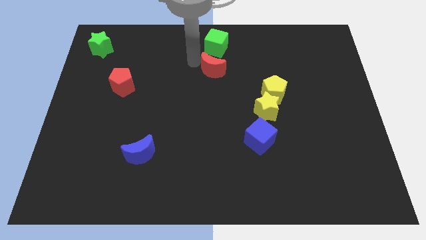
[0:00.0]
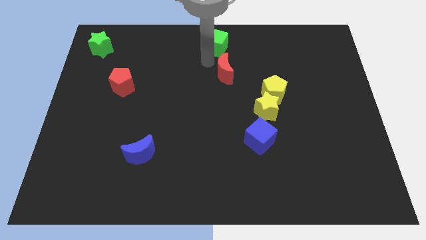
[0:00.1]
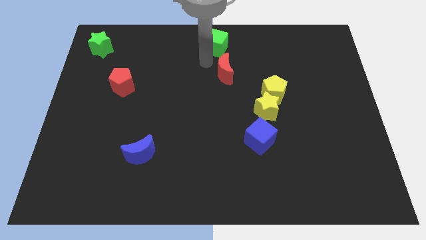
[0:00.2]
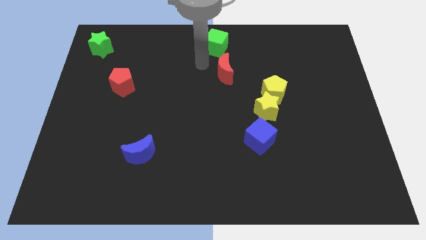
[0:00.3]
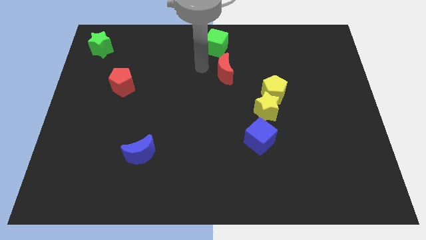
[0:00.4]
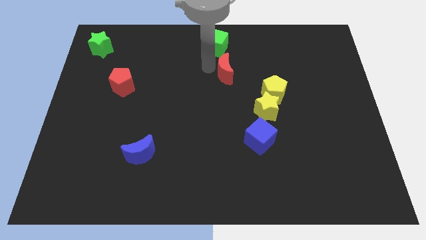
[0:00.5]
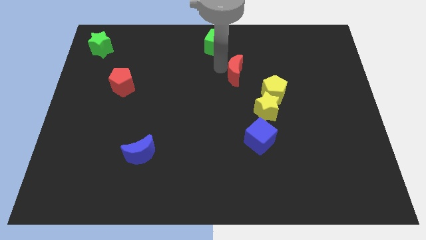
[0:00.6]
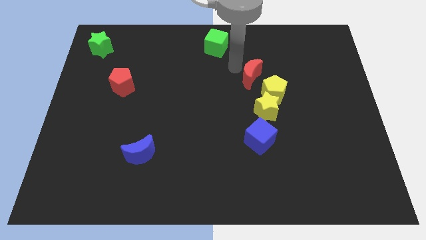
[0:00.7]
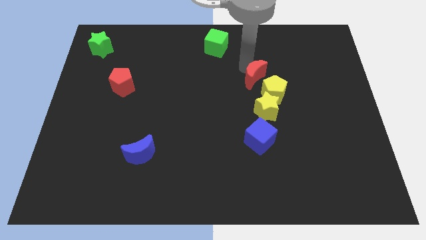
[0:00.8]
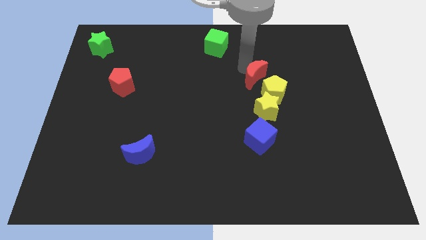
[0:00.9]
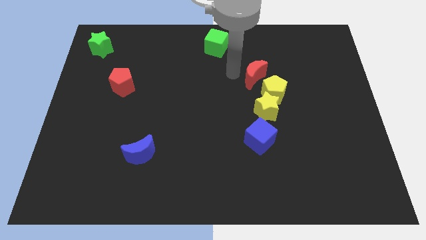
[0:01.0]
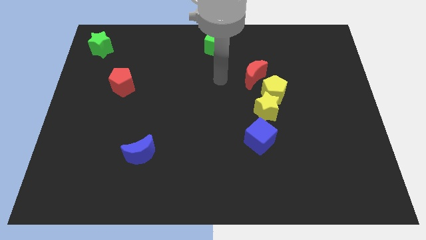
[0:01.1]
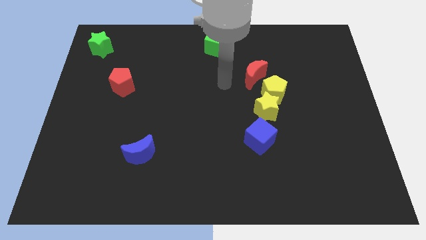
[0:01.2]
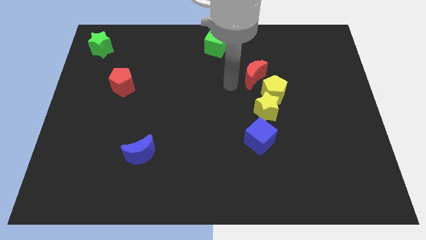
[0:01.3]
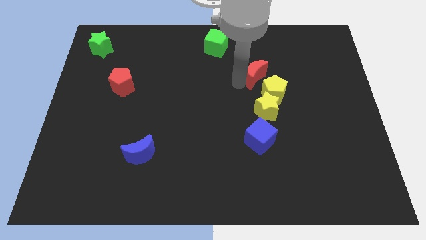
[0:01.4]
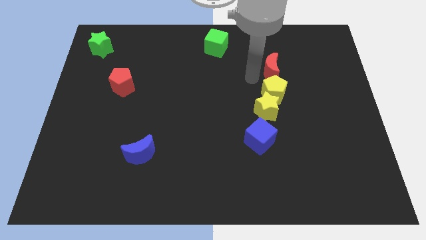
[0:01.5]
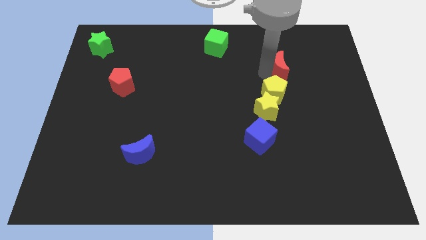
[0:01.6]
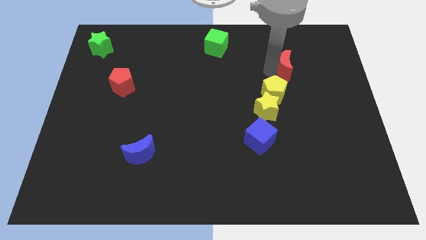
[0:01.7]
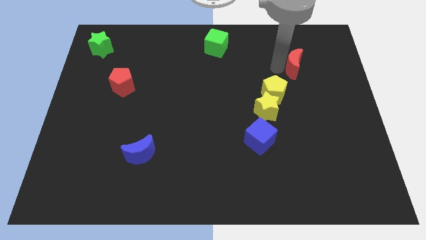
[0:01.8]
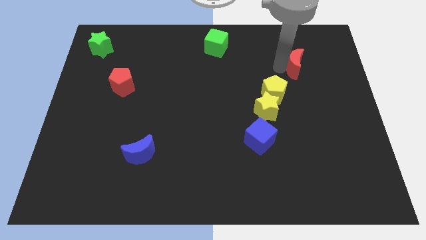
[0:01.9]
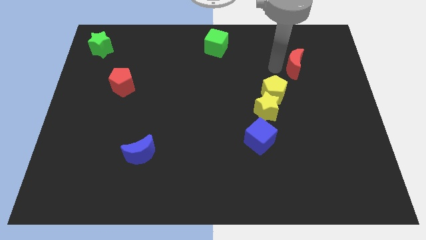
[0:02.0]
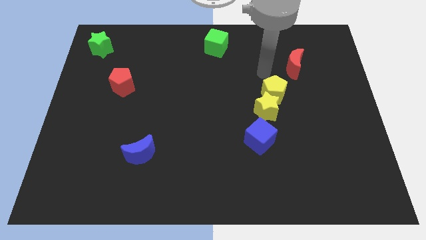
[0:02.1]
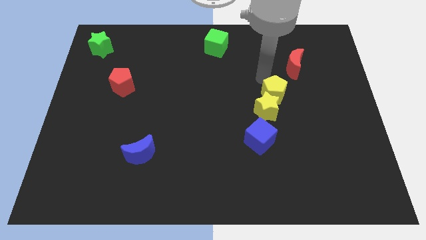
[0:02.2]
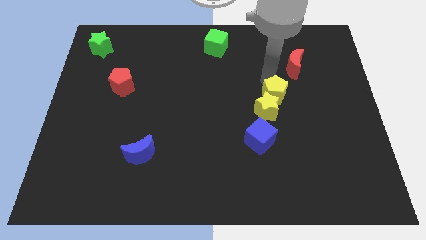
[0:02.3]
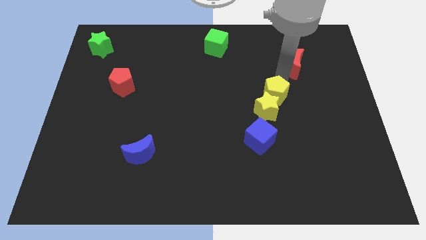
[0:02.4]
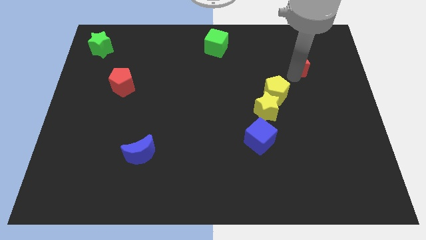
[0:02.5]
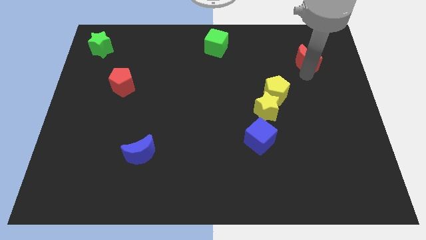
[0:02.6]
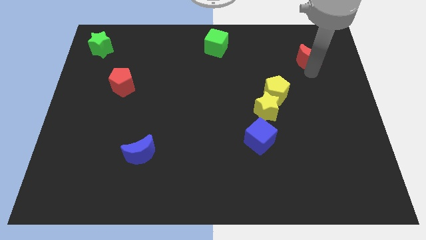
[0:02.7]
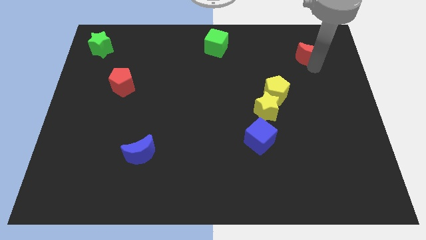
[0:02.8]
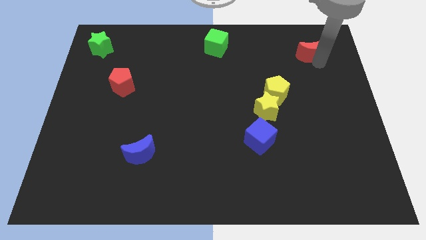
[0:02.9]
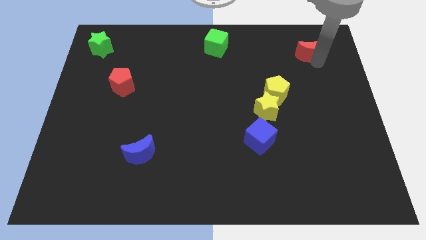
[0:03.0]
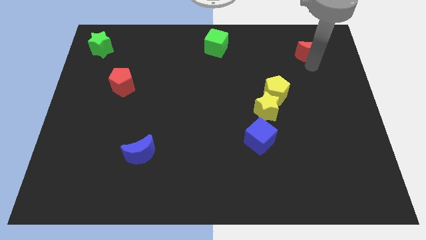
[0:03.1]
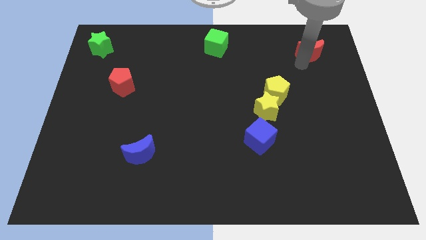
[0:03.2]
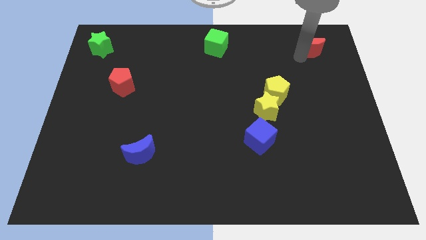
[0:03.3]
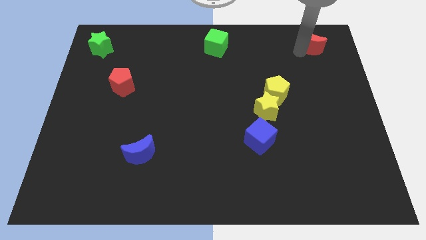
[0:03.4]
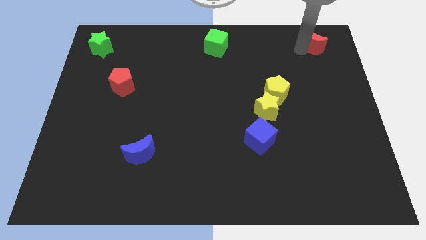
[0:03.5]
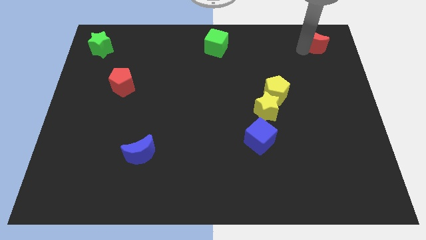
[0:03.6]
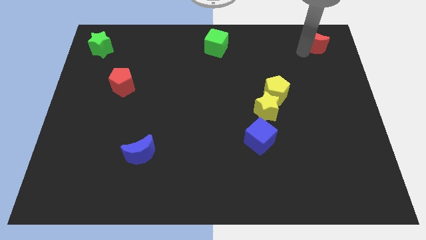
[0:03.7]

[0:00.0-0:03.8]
place the red moon at the top right corner of the board

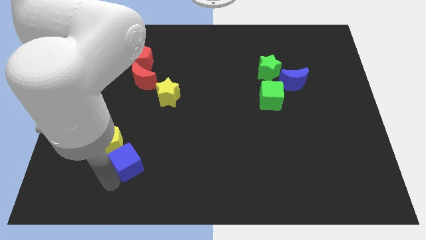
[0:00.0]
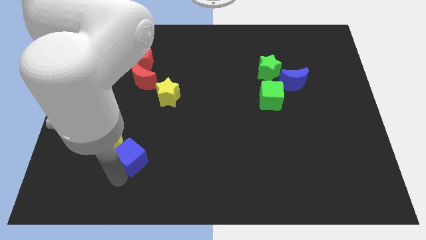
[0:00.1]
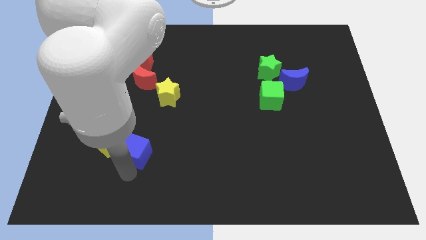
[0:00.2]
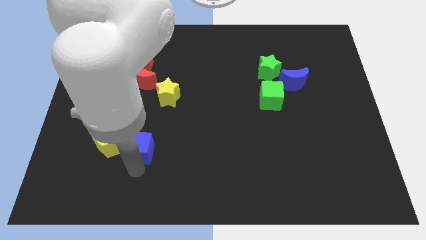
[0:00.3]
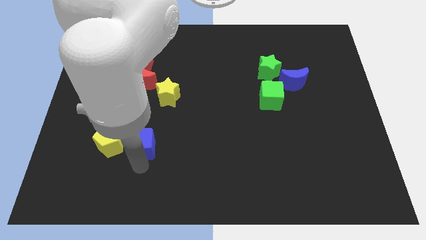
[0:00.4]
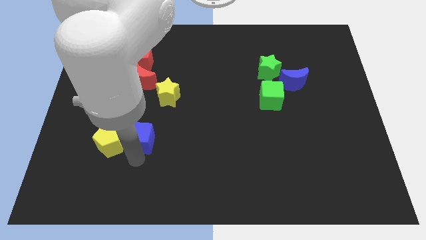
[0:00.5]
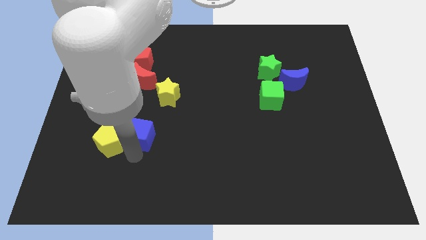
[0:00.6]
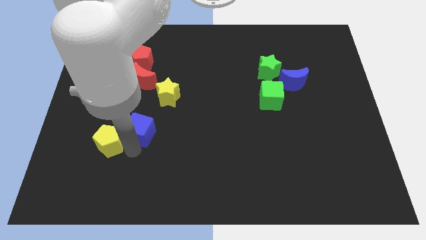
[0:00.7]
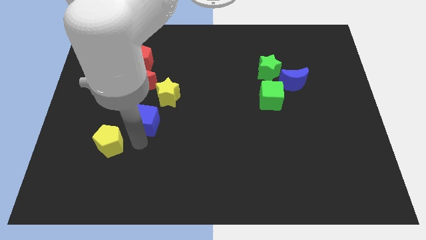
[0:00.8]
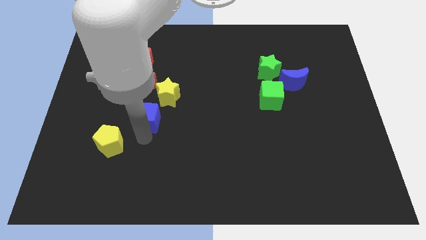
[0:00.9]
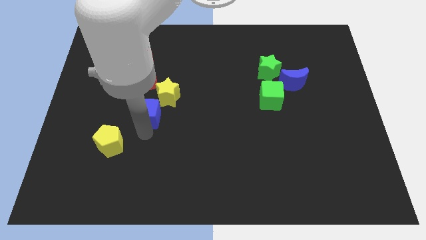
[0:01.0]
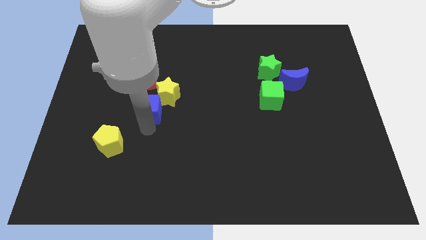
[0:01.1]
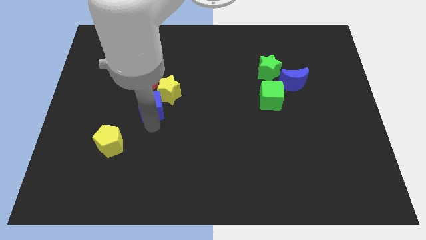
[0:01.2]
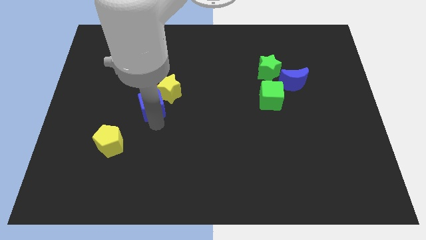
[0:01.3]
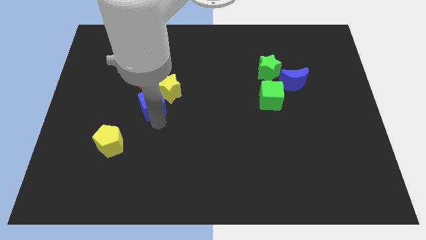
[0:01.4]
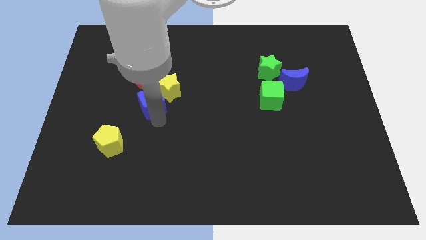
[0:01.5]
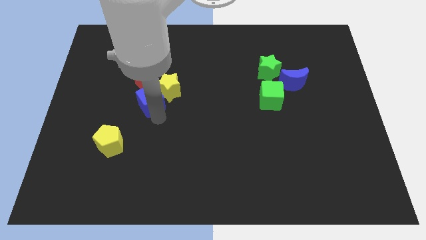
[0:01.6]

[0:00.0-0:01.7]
move the blue cube into the yellow star

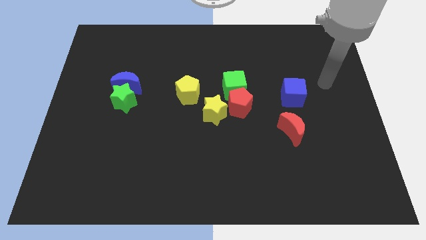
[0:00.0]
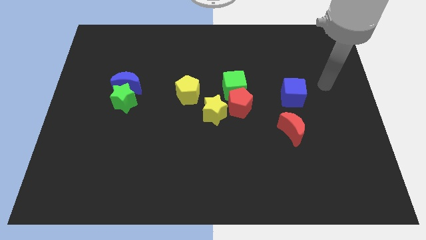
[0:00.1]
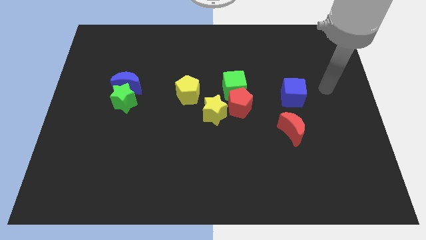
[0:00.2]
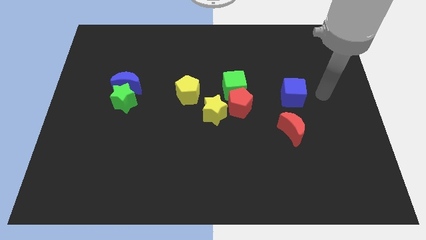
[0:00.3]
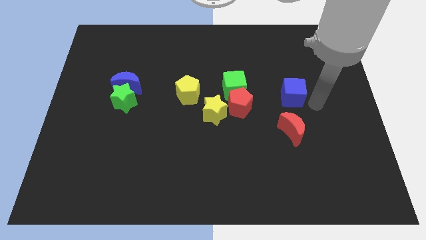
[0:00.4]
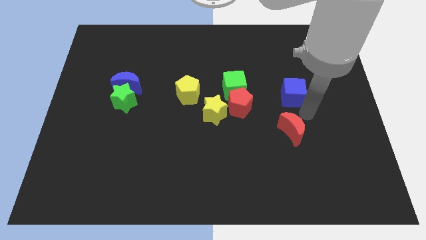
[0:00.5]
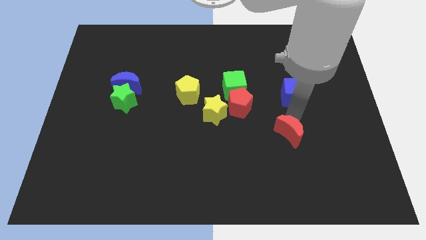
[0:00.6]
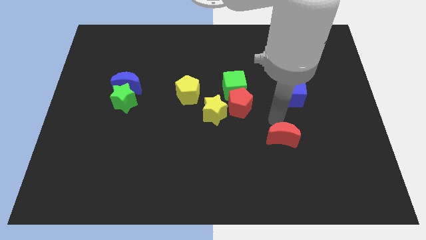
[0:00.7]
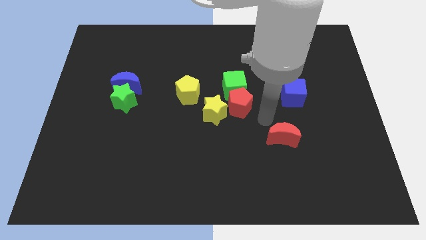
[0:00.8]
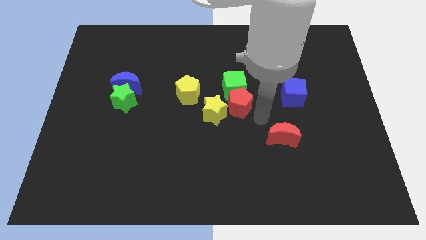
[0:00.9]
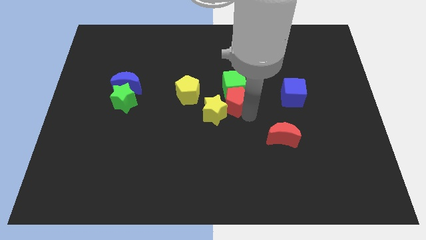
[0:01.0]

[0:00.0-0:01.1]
separate red moon from blue cube

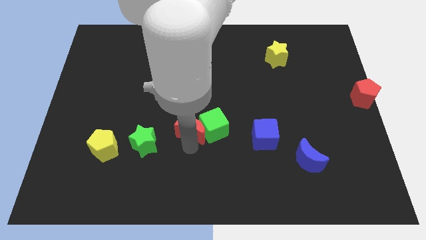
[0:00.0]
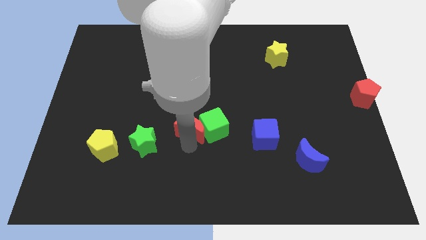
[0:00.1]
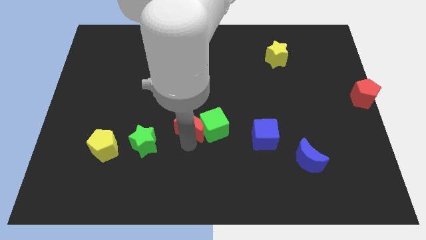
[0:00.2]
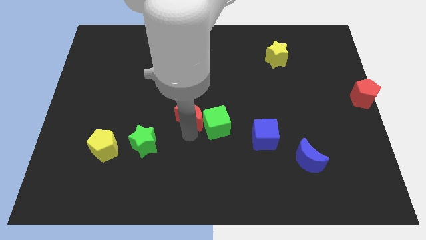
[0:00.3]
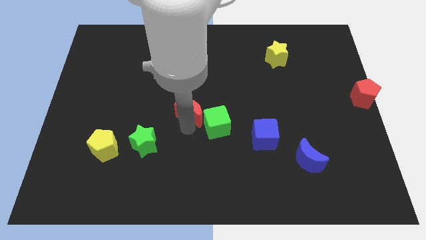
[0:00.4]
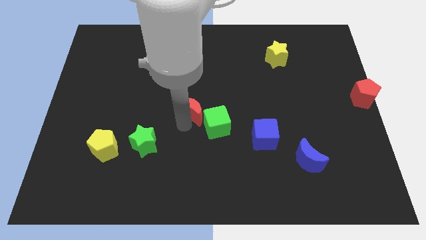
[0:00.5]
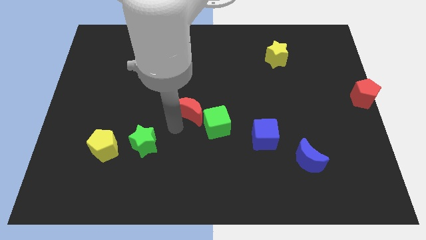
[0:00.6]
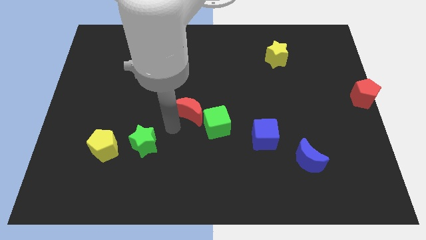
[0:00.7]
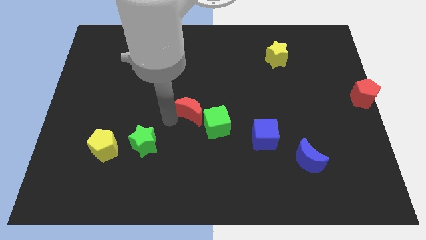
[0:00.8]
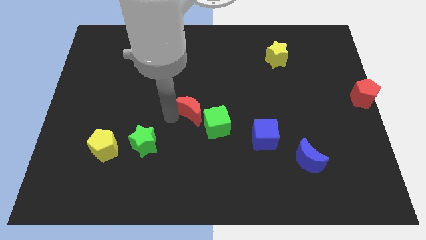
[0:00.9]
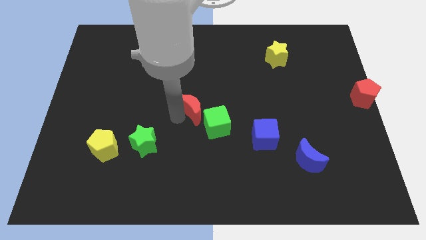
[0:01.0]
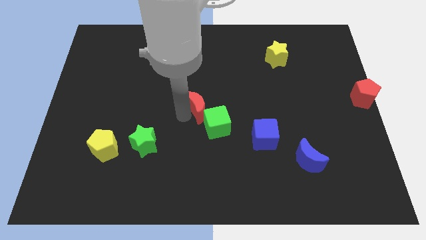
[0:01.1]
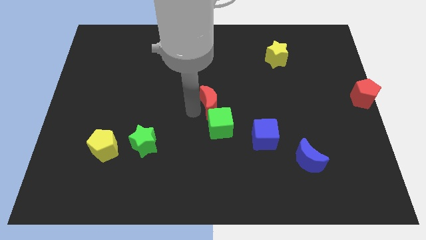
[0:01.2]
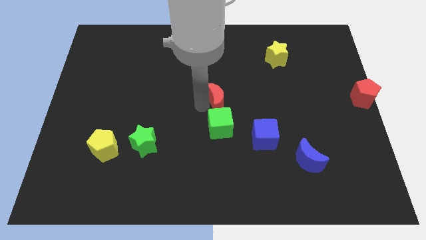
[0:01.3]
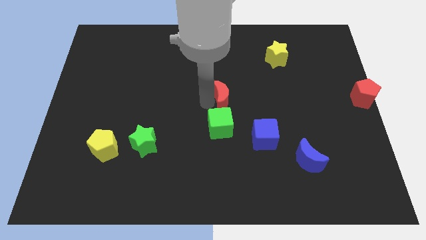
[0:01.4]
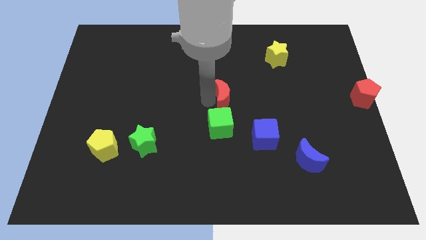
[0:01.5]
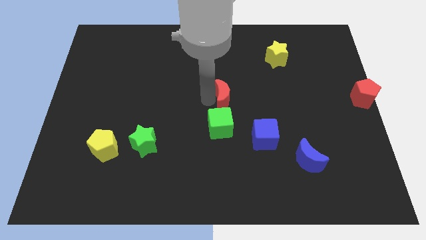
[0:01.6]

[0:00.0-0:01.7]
push the red crescent to the top of the green cube

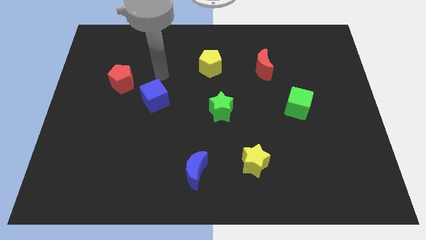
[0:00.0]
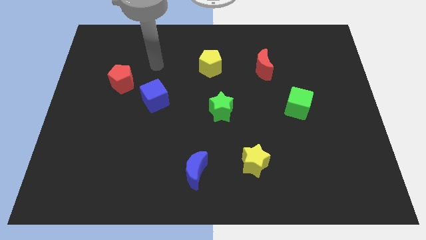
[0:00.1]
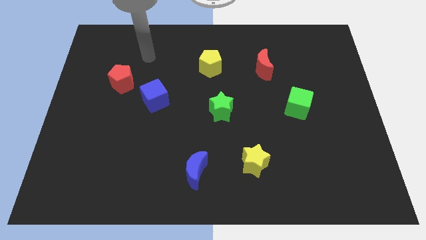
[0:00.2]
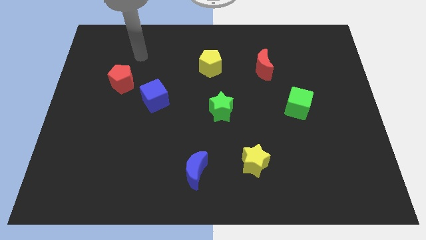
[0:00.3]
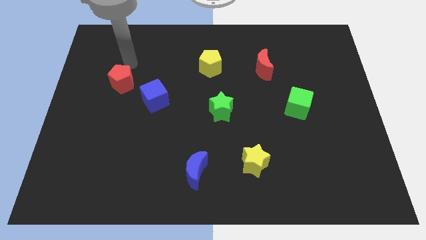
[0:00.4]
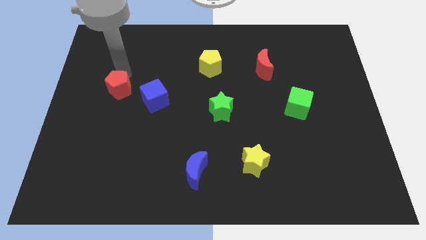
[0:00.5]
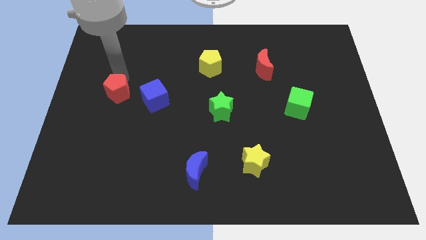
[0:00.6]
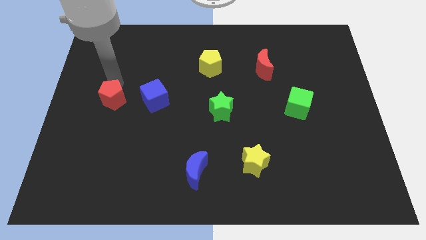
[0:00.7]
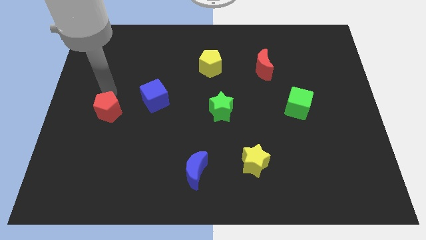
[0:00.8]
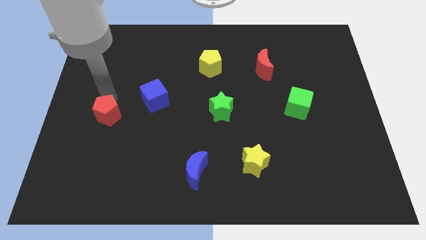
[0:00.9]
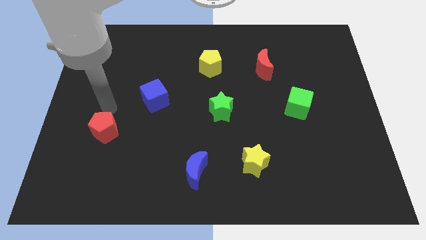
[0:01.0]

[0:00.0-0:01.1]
slide red pentagon down to the bottom left of blue cube
